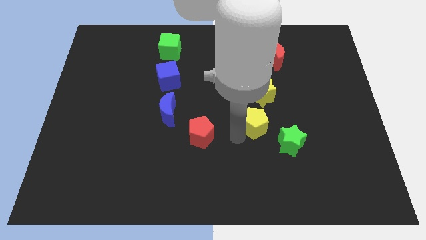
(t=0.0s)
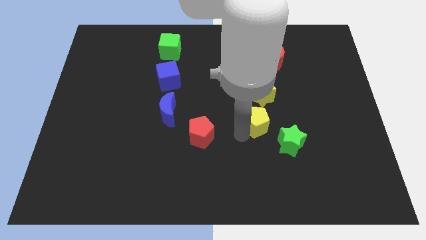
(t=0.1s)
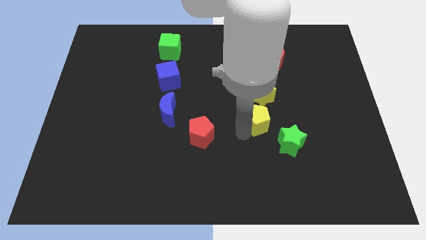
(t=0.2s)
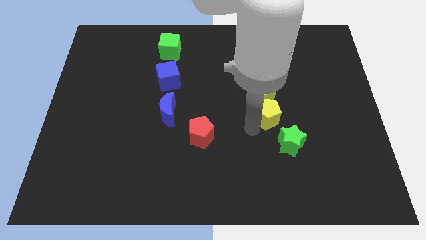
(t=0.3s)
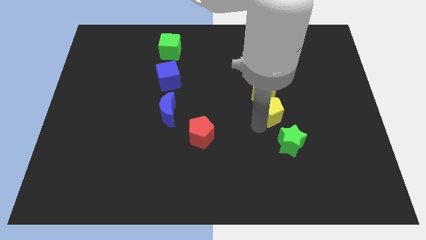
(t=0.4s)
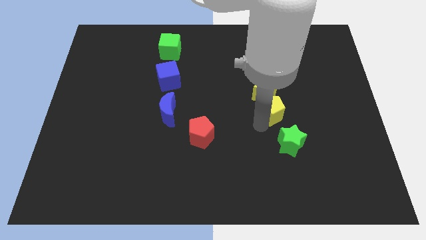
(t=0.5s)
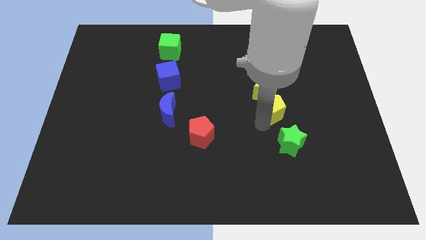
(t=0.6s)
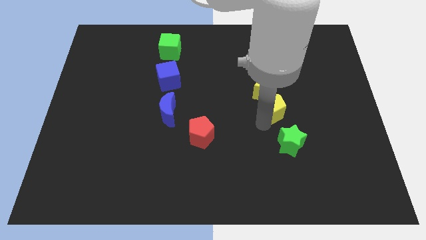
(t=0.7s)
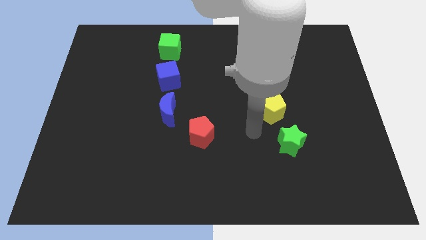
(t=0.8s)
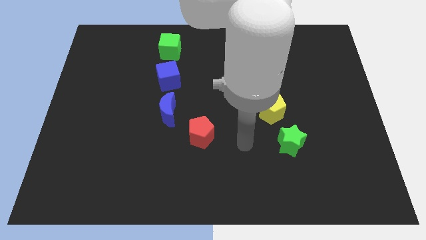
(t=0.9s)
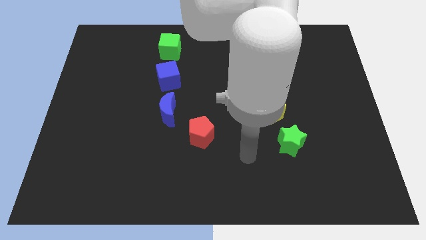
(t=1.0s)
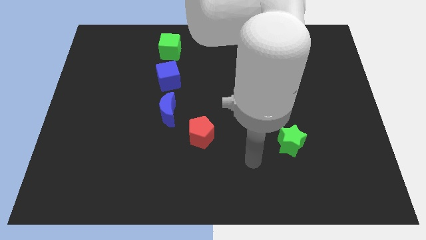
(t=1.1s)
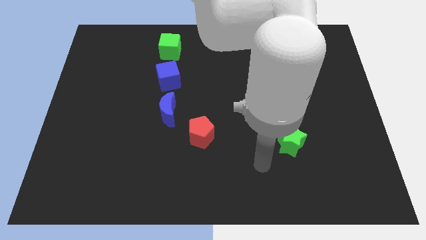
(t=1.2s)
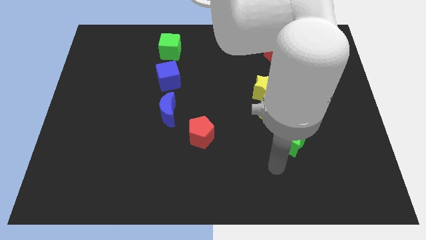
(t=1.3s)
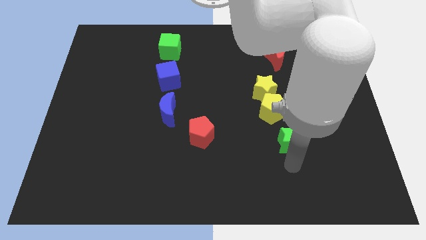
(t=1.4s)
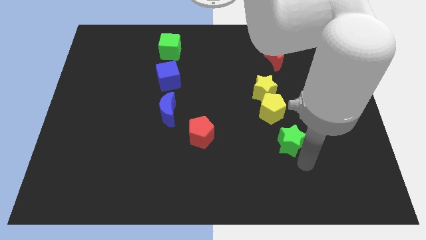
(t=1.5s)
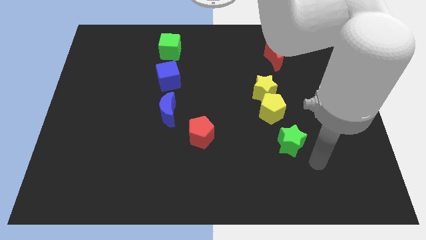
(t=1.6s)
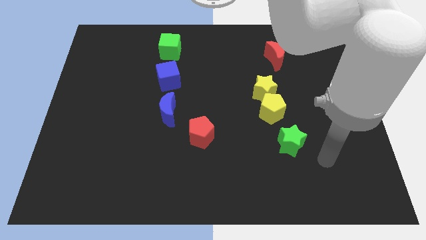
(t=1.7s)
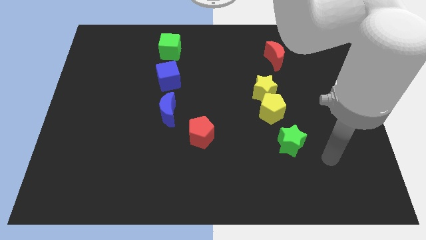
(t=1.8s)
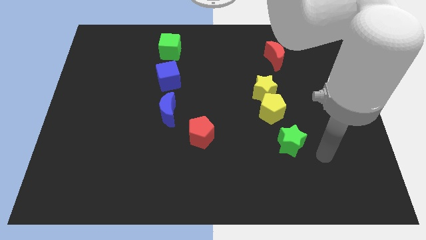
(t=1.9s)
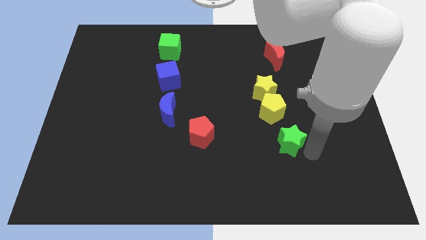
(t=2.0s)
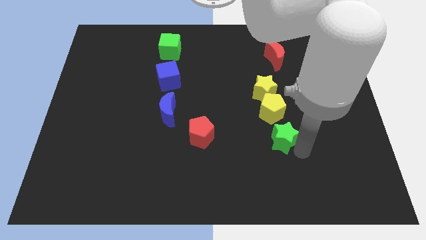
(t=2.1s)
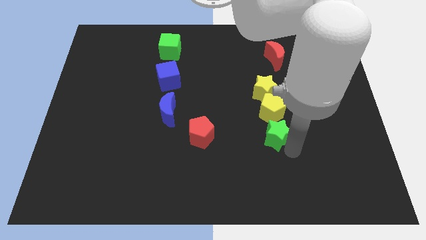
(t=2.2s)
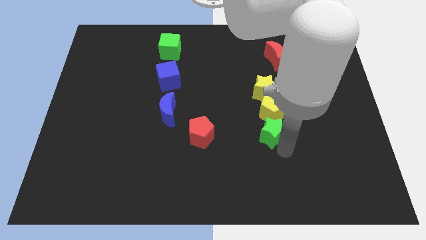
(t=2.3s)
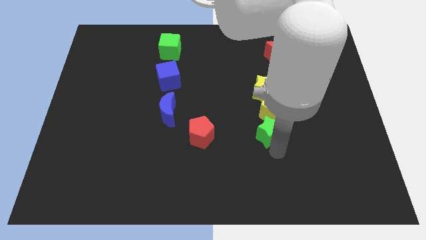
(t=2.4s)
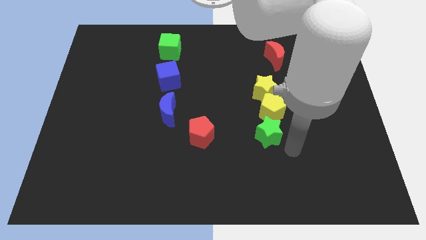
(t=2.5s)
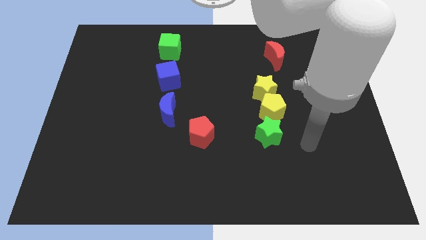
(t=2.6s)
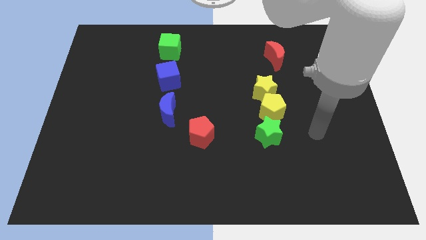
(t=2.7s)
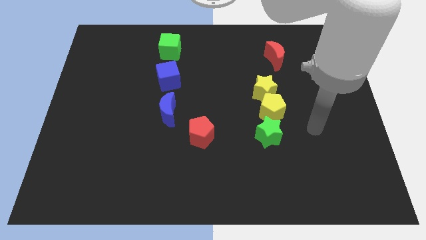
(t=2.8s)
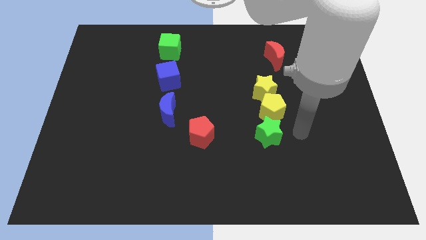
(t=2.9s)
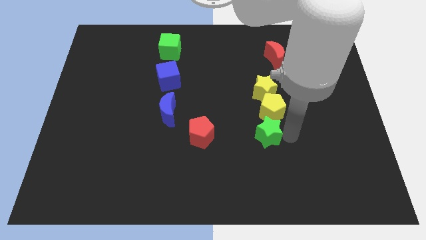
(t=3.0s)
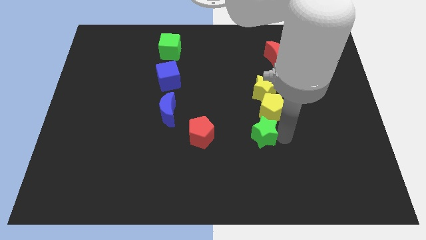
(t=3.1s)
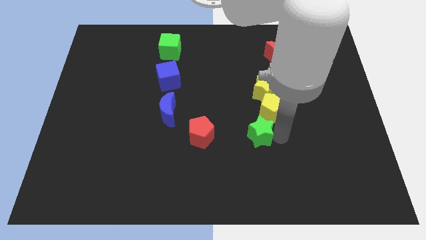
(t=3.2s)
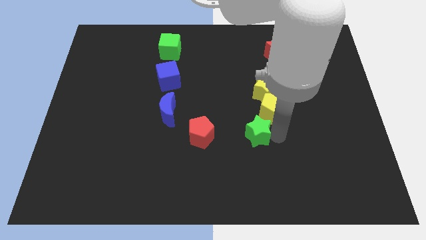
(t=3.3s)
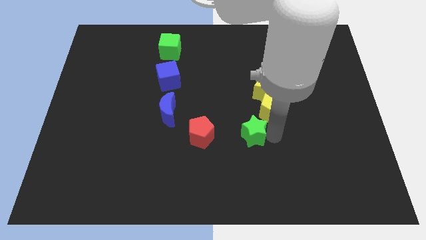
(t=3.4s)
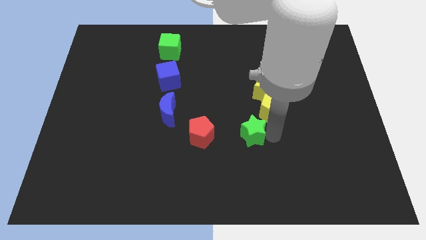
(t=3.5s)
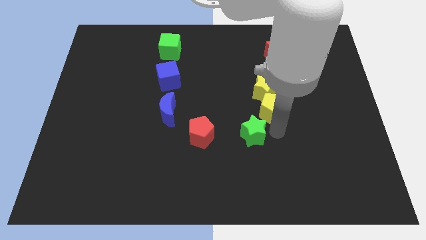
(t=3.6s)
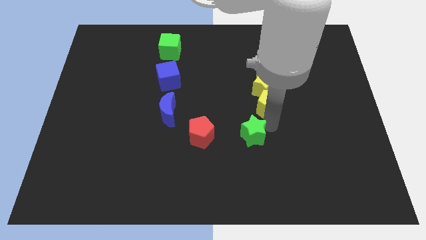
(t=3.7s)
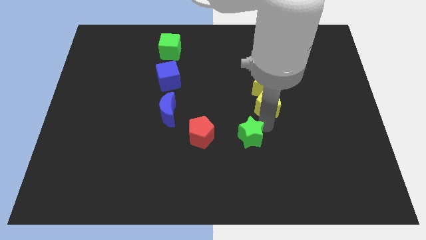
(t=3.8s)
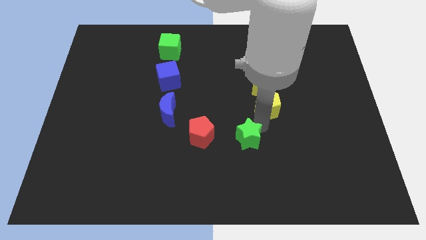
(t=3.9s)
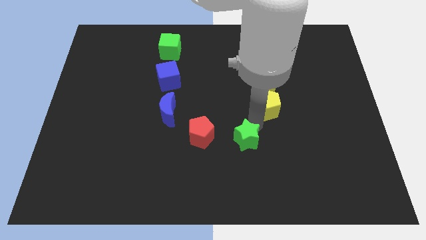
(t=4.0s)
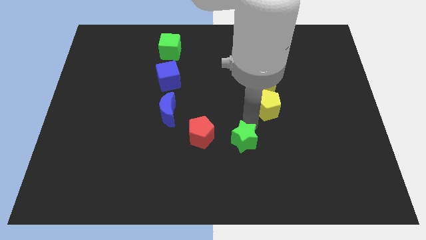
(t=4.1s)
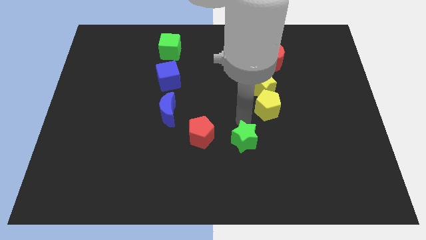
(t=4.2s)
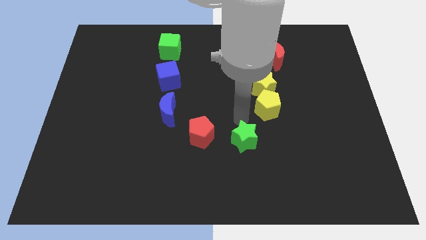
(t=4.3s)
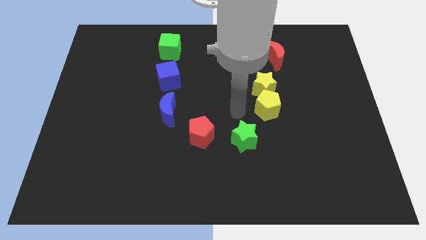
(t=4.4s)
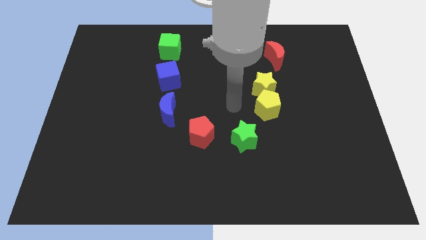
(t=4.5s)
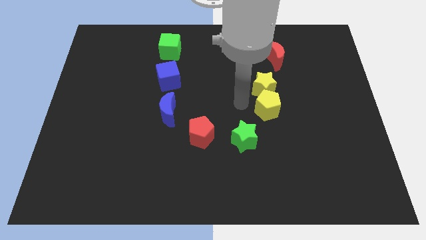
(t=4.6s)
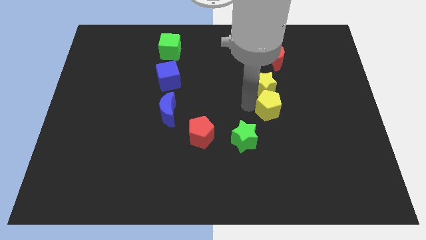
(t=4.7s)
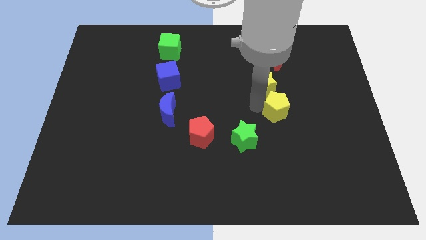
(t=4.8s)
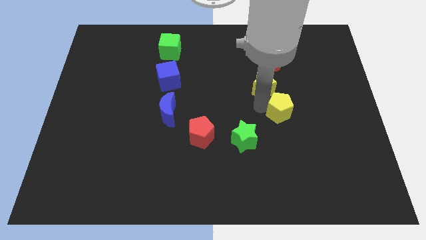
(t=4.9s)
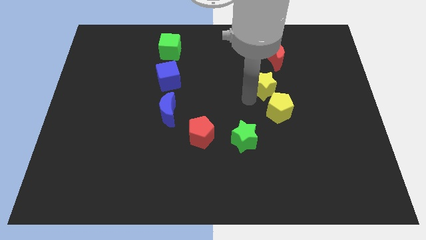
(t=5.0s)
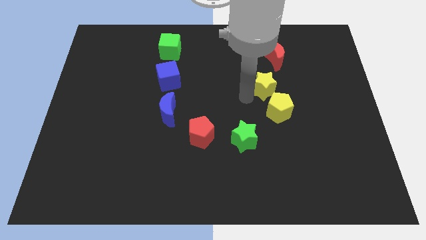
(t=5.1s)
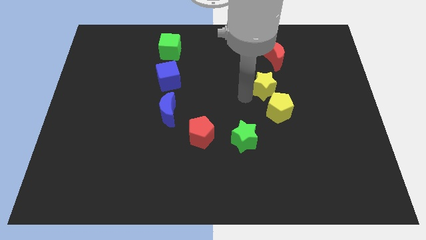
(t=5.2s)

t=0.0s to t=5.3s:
move the yellow pentagon diagonally to the top right of the green star

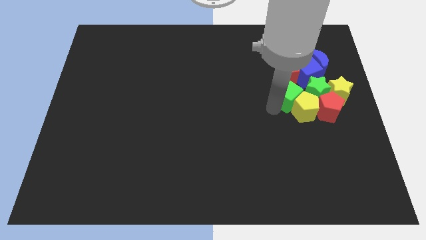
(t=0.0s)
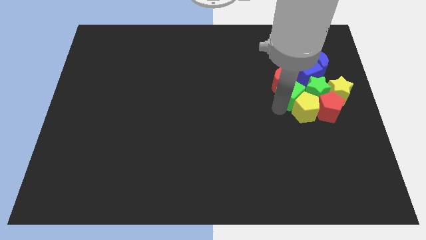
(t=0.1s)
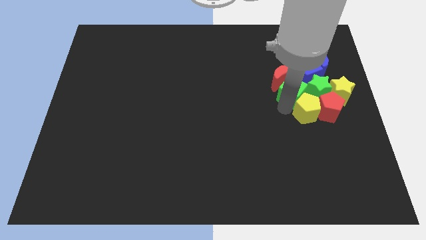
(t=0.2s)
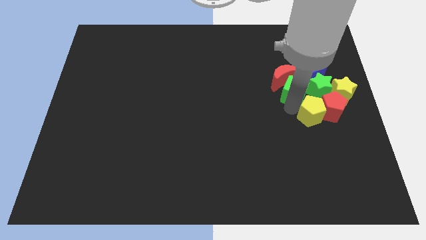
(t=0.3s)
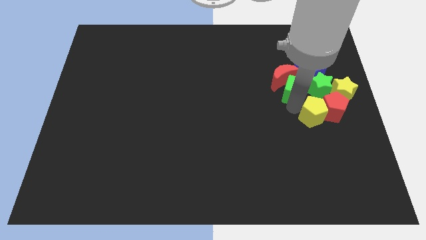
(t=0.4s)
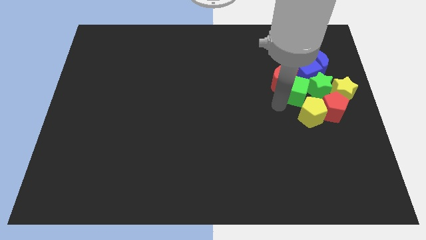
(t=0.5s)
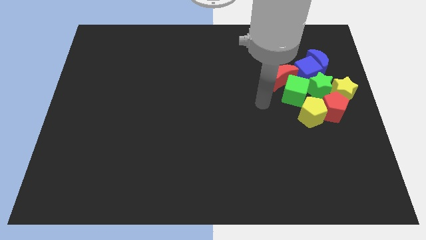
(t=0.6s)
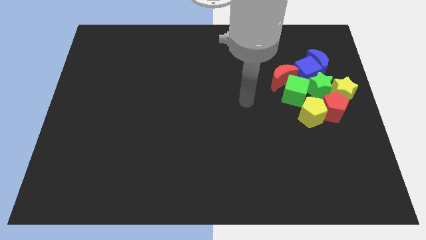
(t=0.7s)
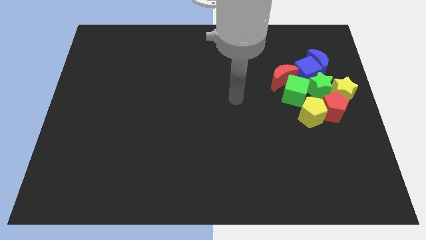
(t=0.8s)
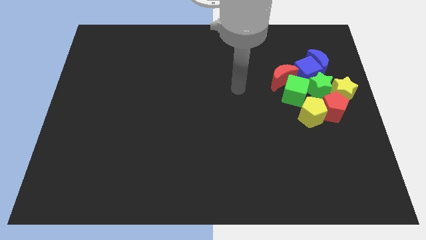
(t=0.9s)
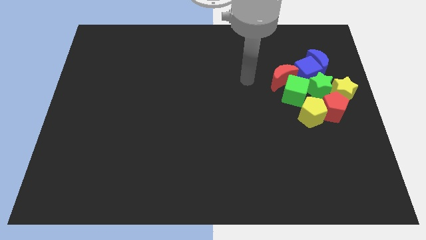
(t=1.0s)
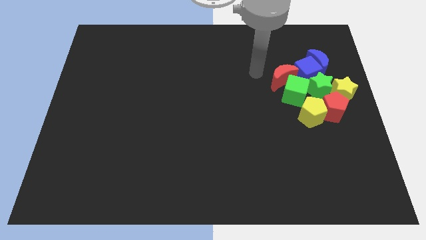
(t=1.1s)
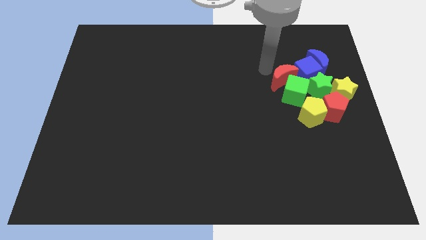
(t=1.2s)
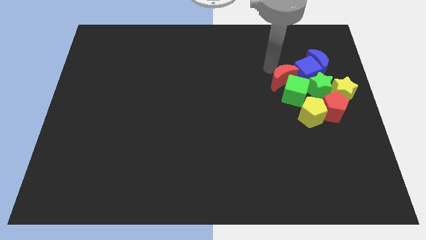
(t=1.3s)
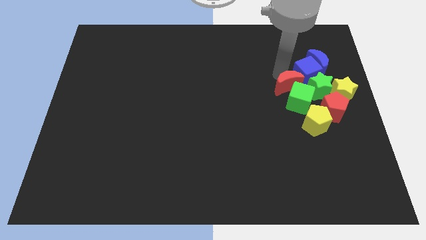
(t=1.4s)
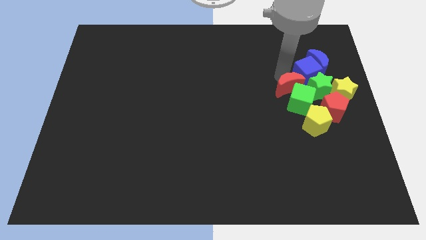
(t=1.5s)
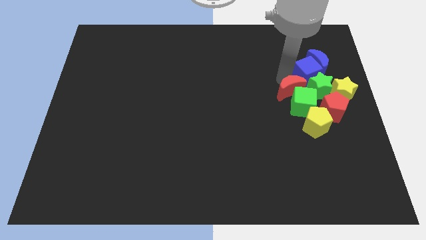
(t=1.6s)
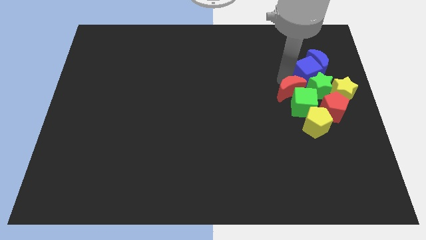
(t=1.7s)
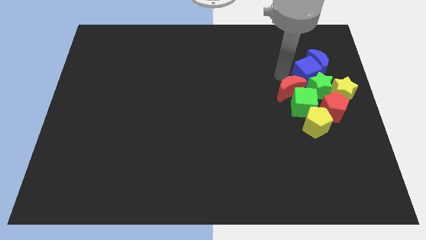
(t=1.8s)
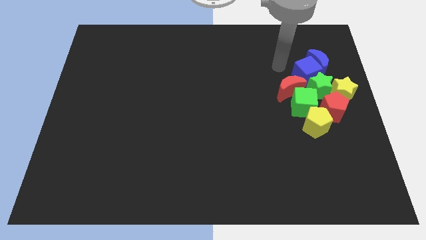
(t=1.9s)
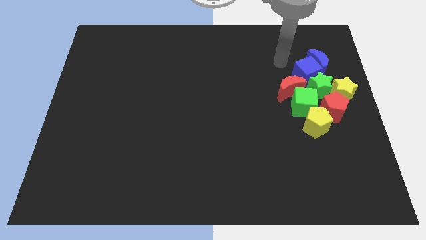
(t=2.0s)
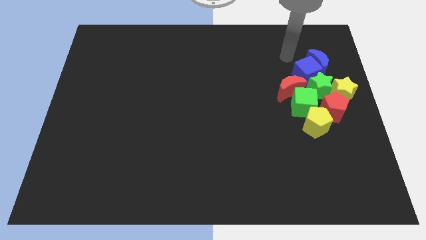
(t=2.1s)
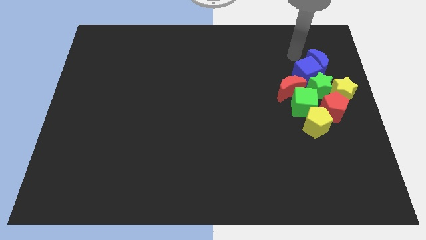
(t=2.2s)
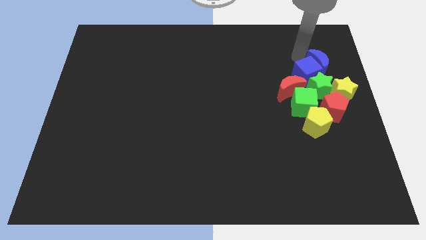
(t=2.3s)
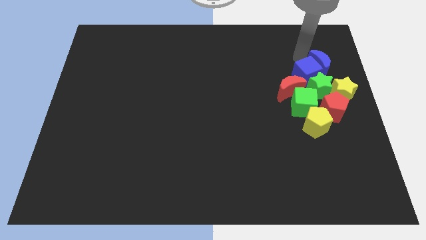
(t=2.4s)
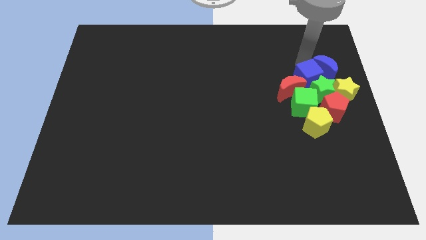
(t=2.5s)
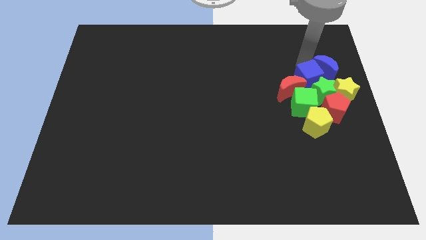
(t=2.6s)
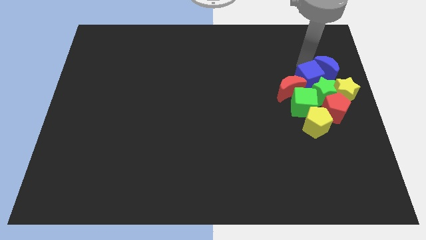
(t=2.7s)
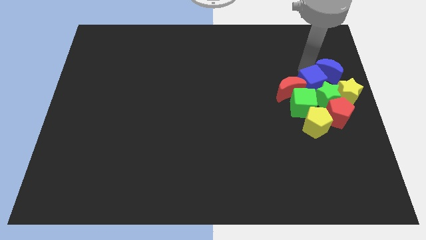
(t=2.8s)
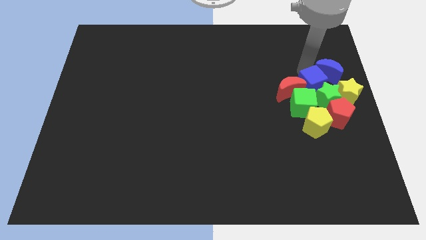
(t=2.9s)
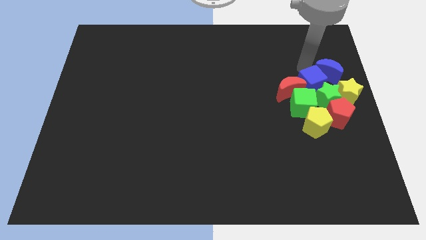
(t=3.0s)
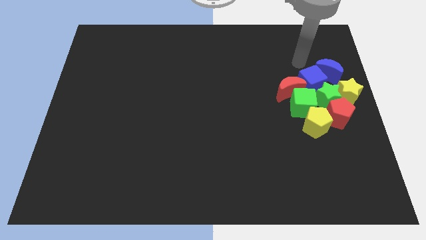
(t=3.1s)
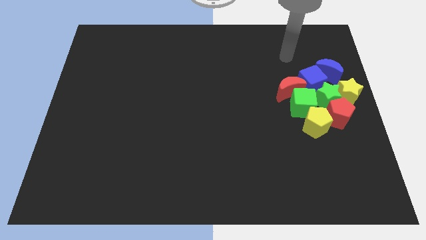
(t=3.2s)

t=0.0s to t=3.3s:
push all the blocks together

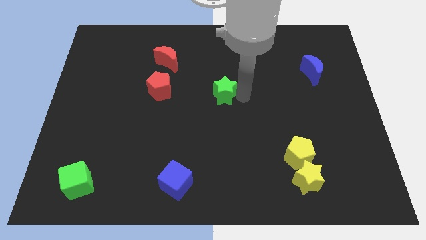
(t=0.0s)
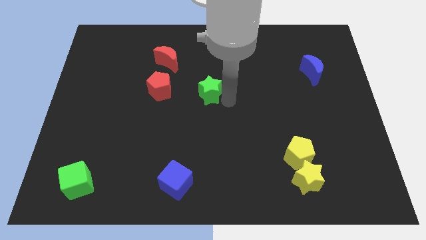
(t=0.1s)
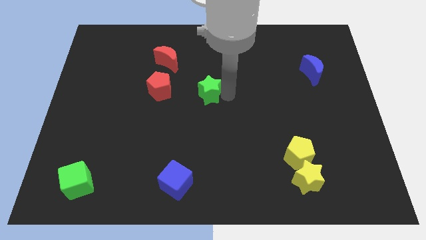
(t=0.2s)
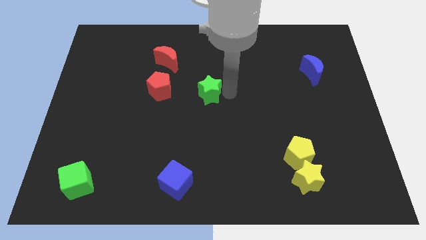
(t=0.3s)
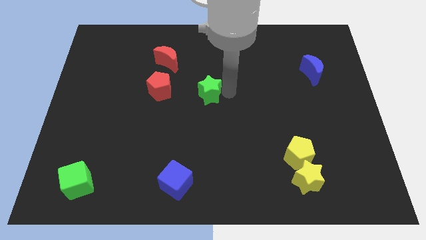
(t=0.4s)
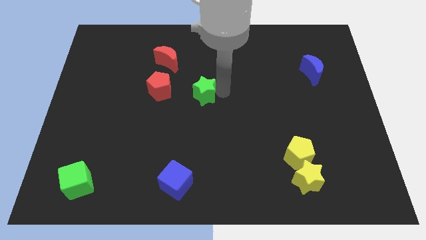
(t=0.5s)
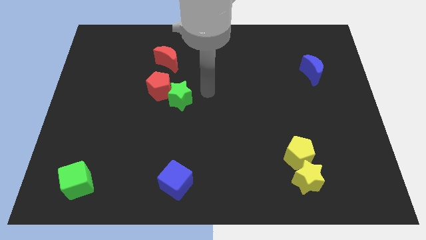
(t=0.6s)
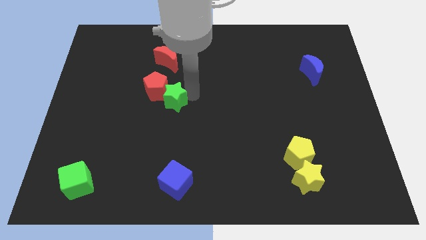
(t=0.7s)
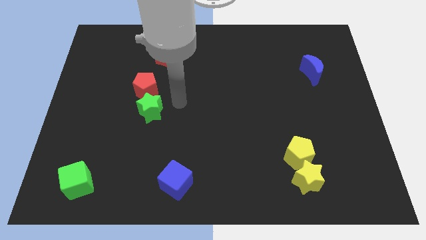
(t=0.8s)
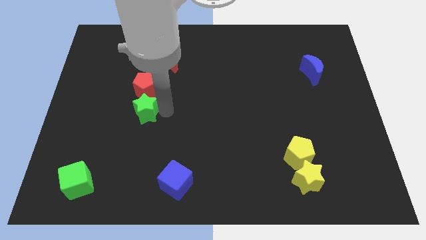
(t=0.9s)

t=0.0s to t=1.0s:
move green star at the bottom of red pentagon
